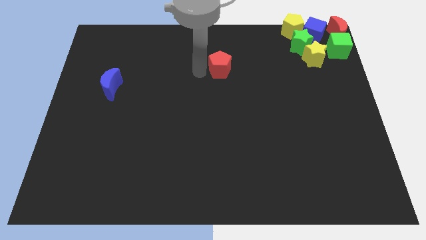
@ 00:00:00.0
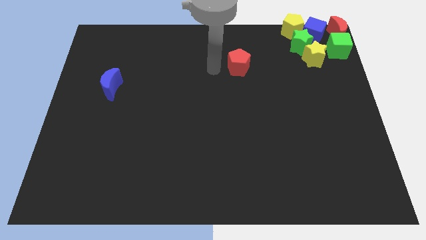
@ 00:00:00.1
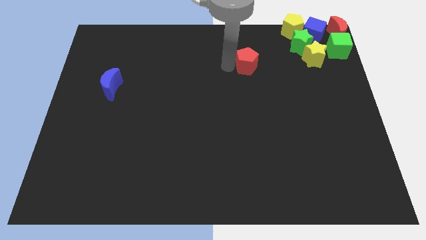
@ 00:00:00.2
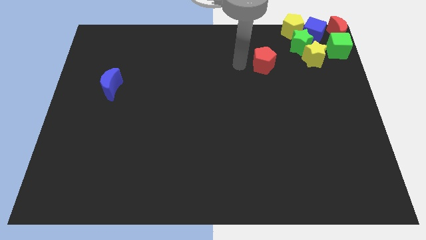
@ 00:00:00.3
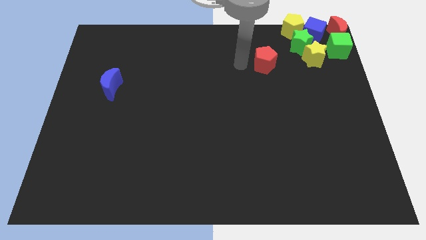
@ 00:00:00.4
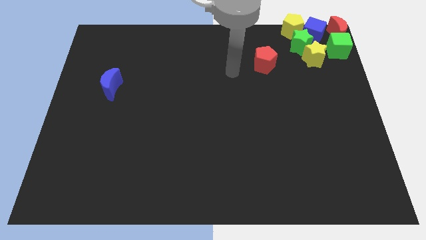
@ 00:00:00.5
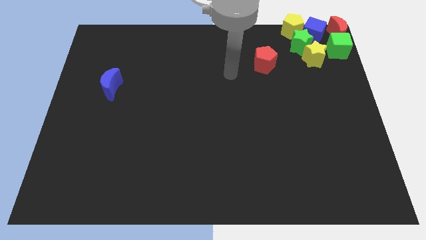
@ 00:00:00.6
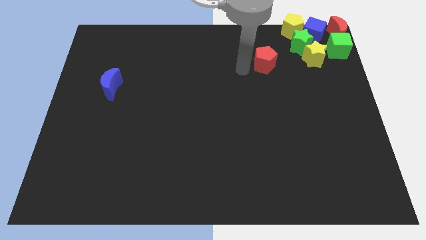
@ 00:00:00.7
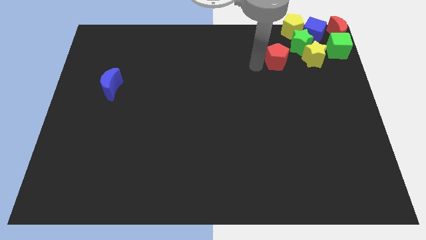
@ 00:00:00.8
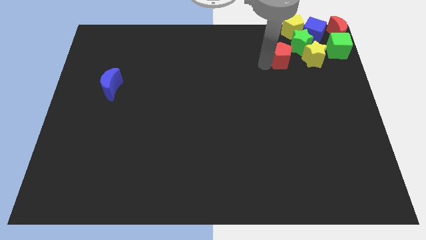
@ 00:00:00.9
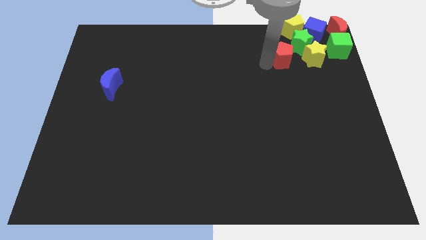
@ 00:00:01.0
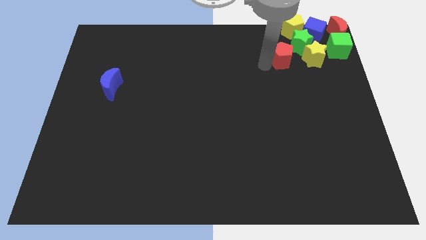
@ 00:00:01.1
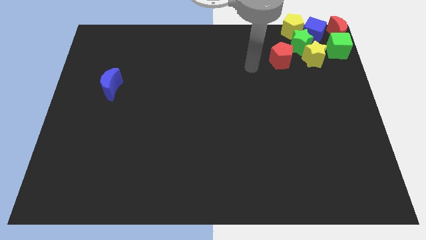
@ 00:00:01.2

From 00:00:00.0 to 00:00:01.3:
move the red pentagon towards the green star

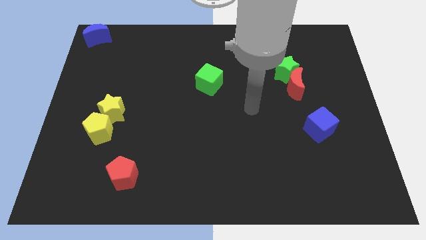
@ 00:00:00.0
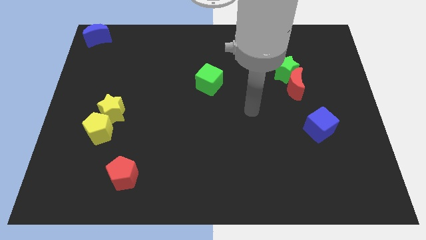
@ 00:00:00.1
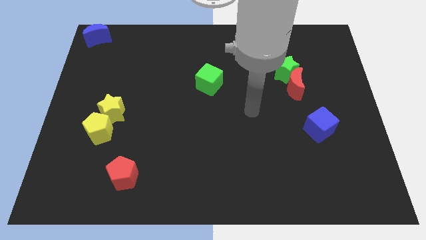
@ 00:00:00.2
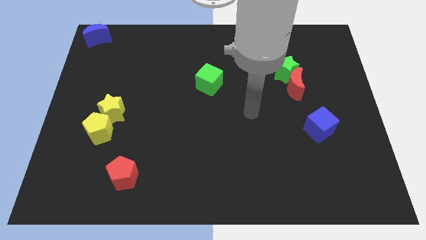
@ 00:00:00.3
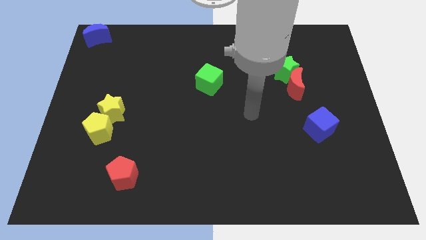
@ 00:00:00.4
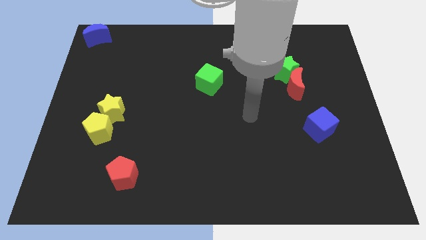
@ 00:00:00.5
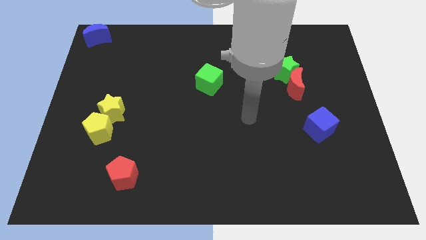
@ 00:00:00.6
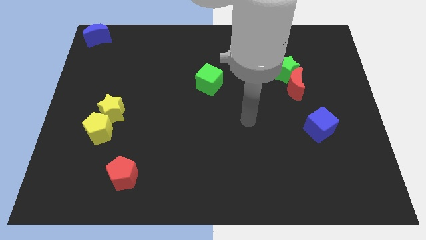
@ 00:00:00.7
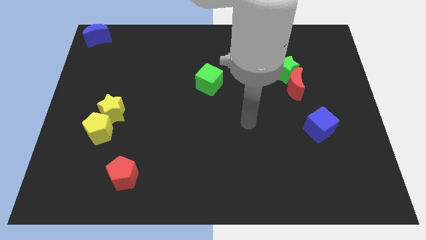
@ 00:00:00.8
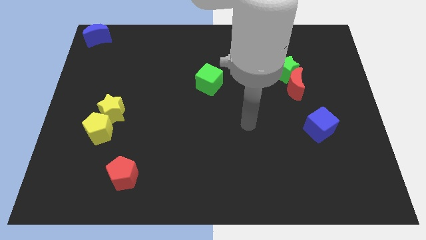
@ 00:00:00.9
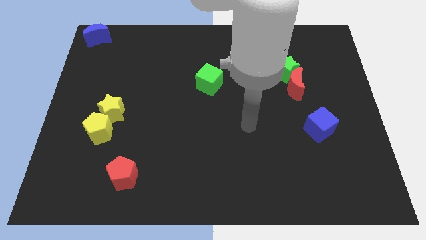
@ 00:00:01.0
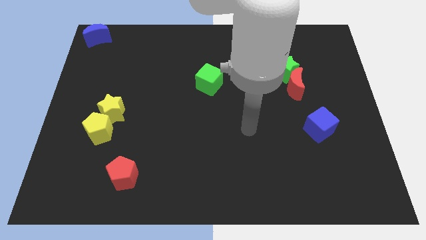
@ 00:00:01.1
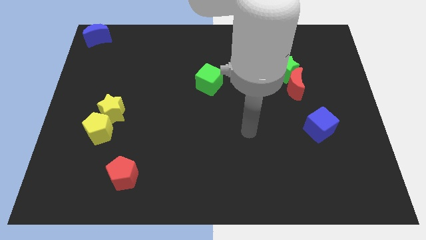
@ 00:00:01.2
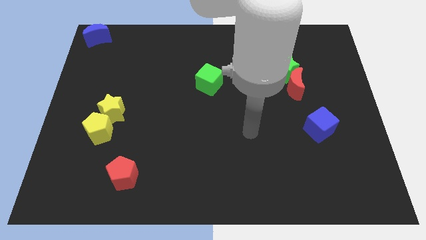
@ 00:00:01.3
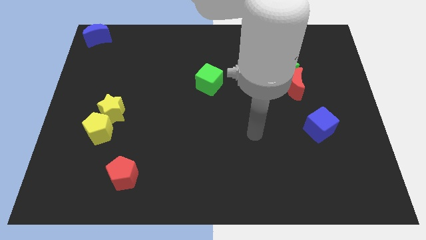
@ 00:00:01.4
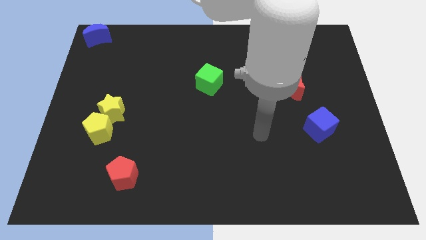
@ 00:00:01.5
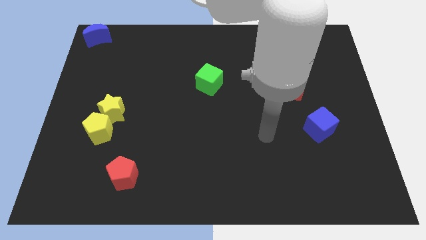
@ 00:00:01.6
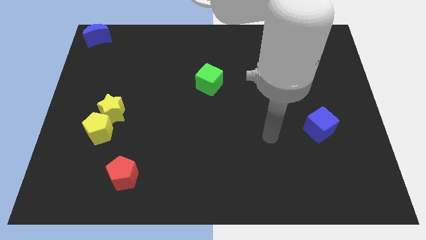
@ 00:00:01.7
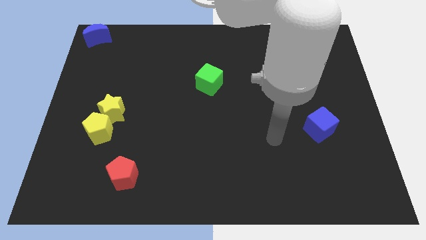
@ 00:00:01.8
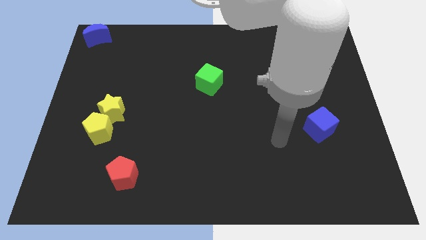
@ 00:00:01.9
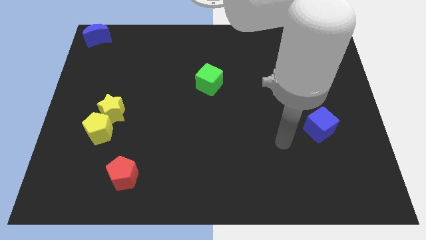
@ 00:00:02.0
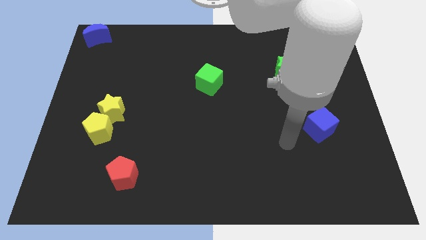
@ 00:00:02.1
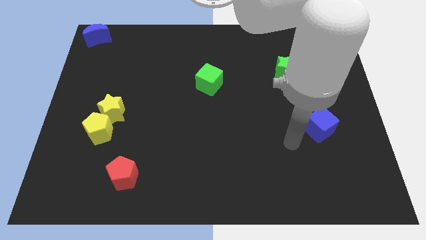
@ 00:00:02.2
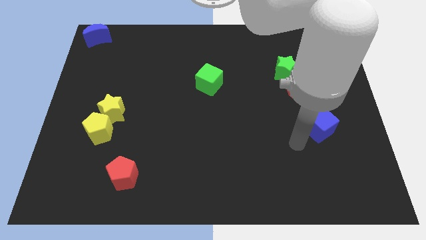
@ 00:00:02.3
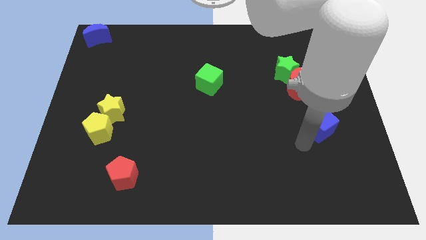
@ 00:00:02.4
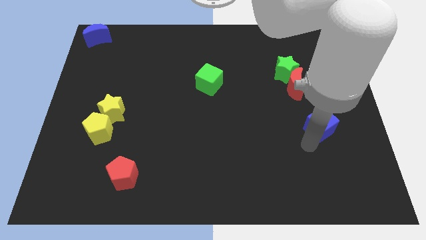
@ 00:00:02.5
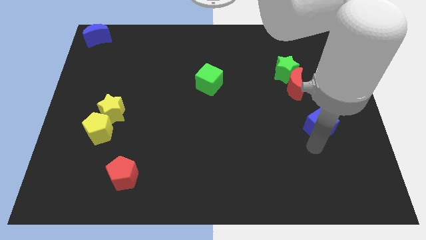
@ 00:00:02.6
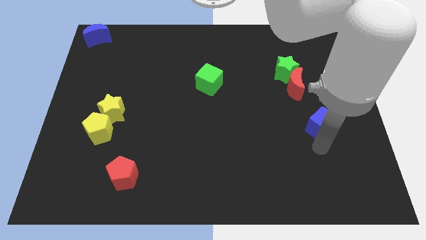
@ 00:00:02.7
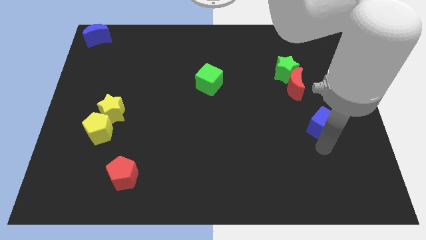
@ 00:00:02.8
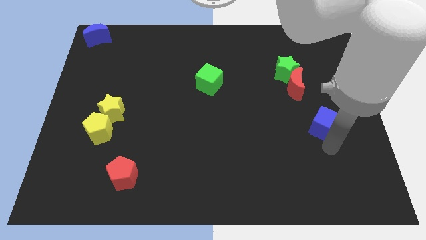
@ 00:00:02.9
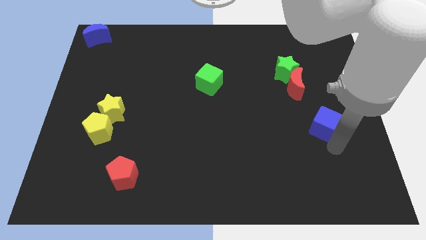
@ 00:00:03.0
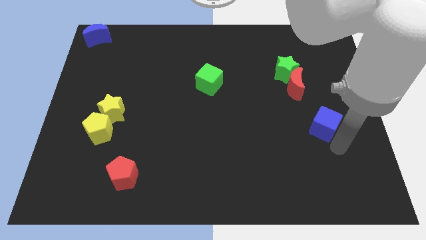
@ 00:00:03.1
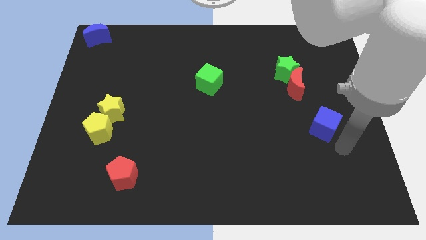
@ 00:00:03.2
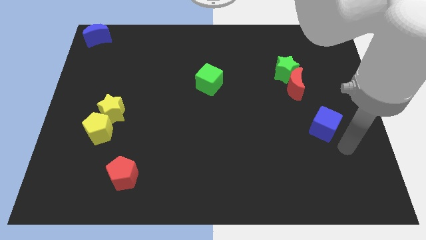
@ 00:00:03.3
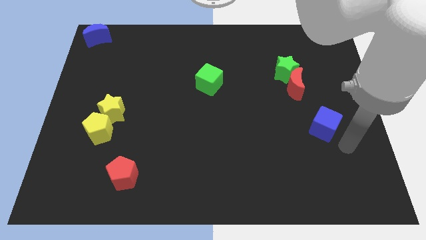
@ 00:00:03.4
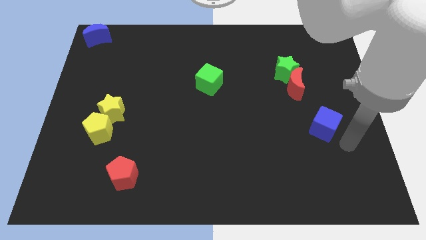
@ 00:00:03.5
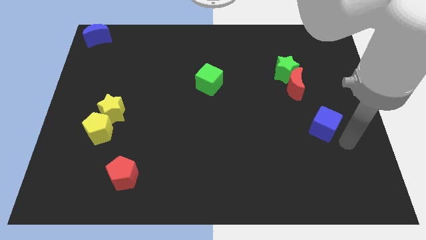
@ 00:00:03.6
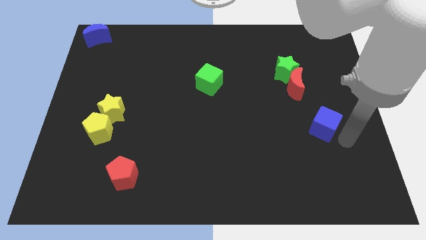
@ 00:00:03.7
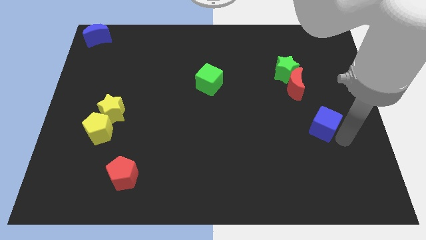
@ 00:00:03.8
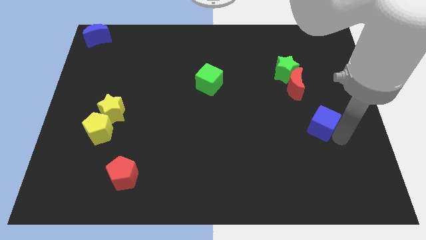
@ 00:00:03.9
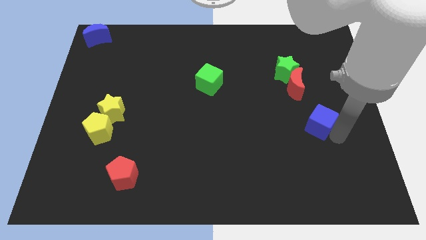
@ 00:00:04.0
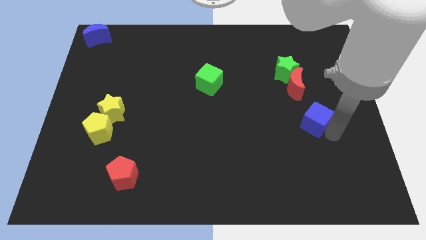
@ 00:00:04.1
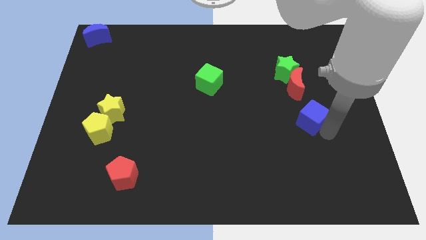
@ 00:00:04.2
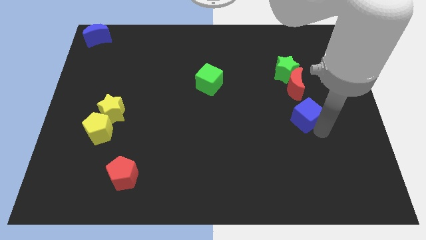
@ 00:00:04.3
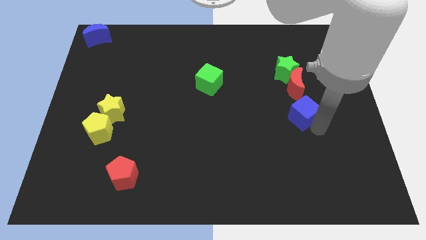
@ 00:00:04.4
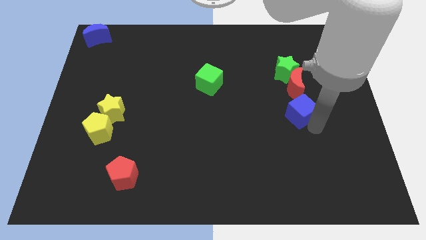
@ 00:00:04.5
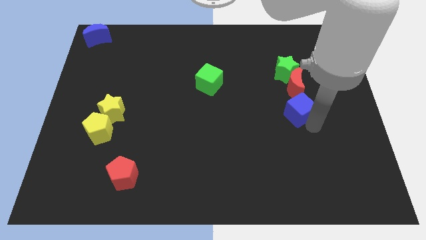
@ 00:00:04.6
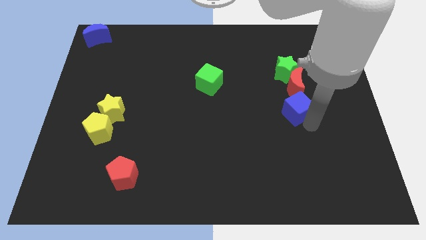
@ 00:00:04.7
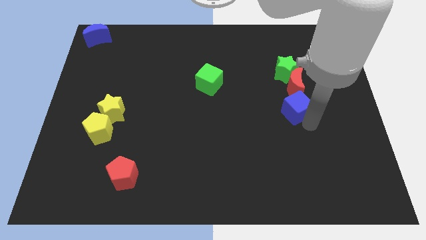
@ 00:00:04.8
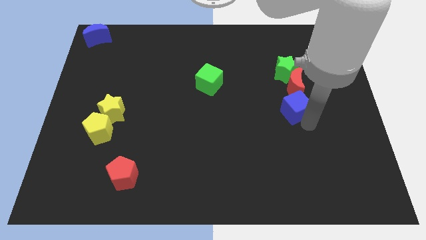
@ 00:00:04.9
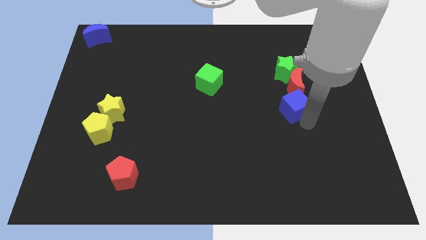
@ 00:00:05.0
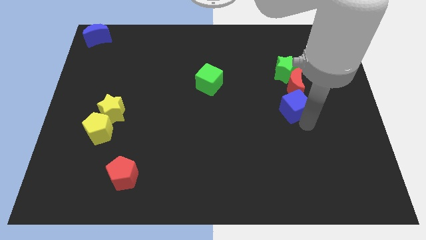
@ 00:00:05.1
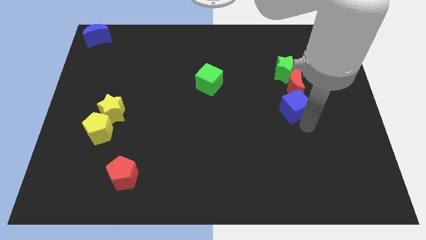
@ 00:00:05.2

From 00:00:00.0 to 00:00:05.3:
place the blue cube below the red moon

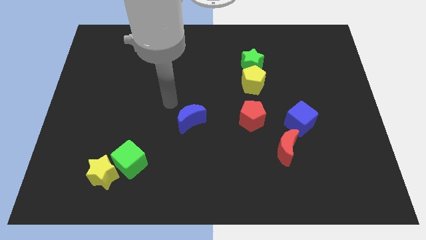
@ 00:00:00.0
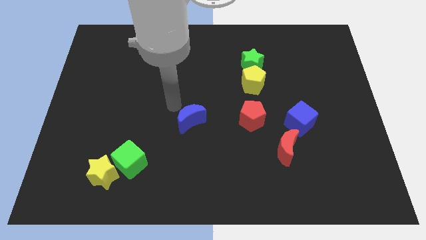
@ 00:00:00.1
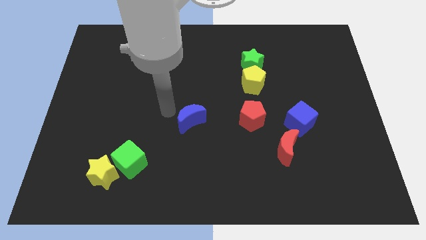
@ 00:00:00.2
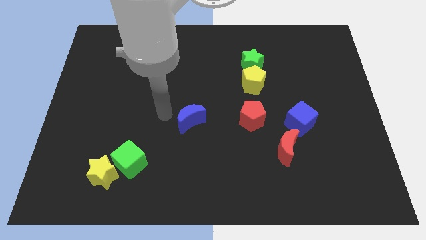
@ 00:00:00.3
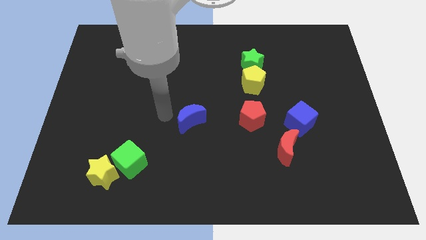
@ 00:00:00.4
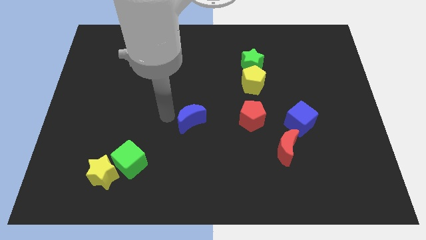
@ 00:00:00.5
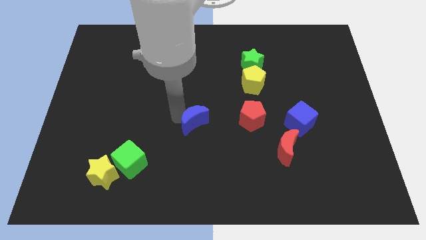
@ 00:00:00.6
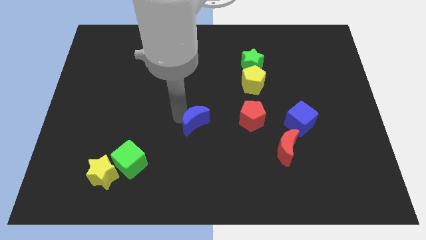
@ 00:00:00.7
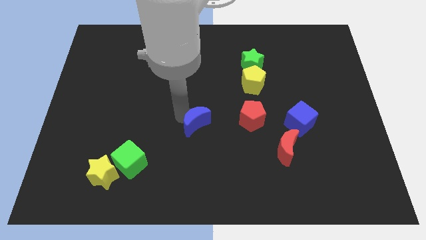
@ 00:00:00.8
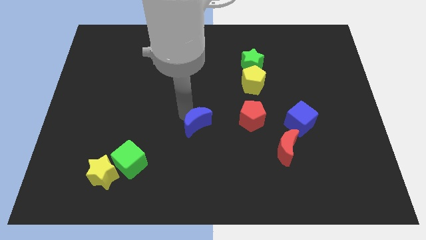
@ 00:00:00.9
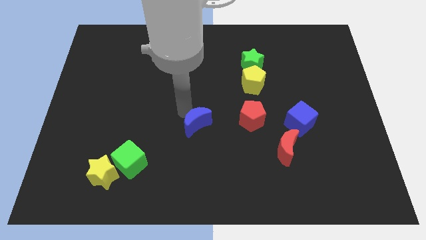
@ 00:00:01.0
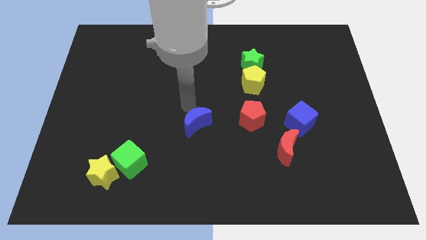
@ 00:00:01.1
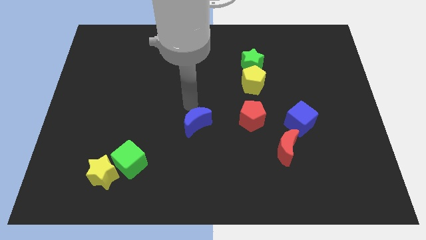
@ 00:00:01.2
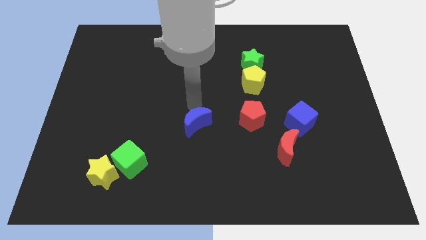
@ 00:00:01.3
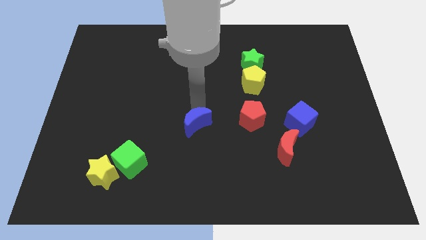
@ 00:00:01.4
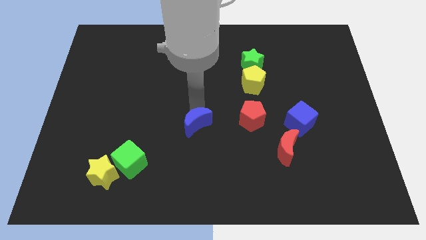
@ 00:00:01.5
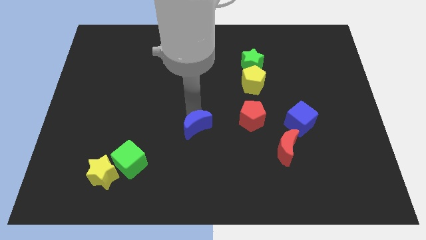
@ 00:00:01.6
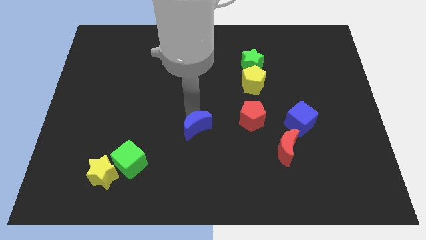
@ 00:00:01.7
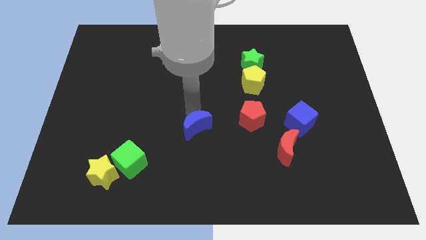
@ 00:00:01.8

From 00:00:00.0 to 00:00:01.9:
push the blue moon slightly downwards

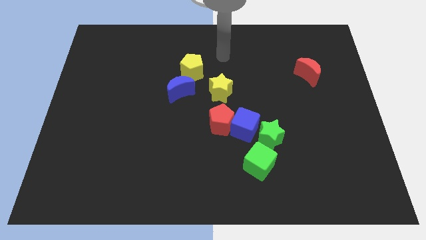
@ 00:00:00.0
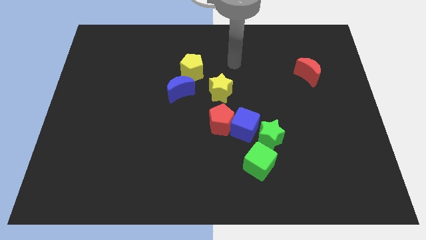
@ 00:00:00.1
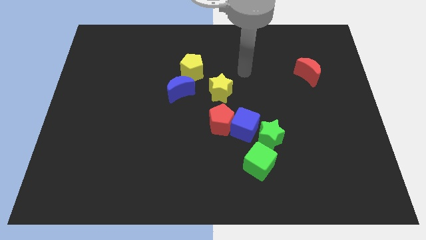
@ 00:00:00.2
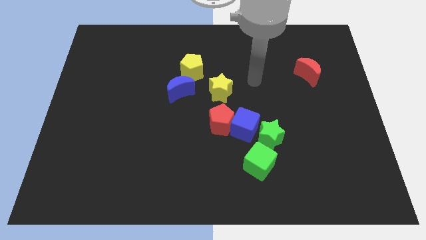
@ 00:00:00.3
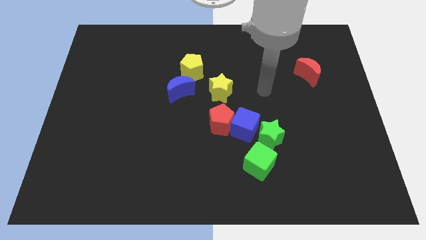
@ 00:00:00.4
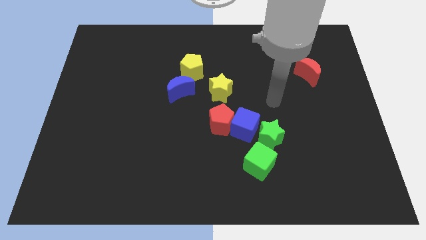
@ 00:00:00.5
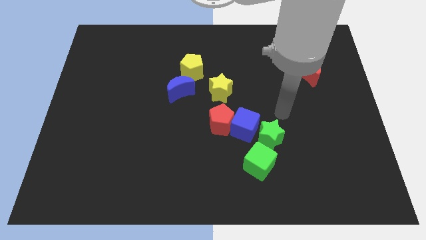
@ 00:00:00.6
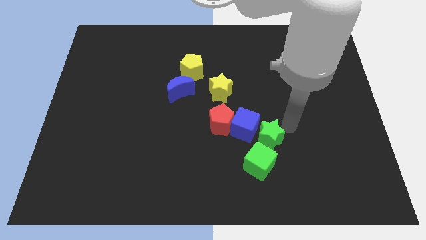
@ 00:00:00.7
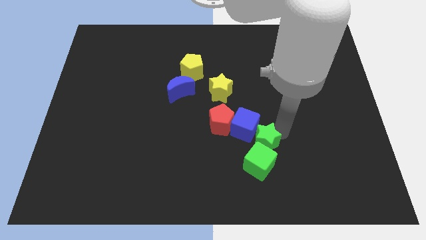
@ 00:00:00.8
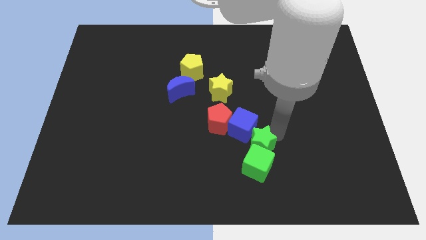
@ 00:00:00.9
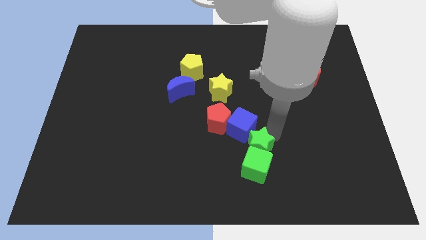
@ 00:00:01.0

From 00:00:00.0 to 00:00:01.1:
push the green star into green cube
